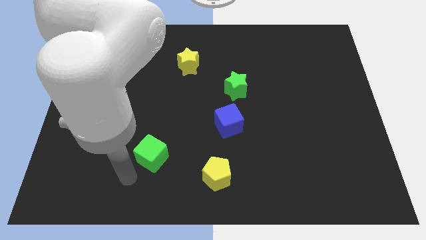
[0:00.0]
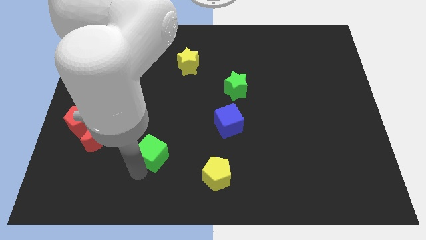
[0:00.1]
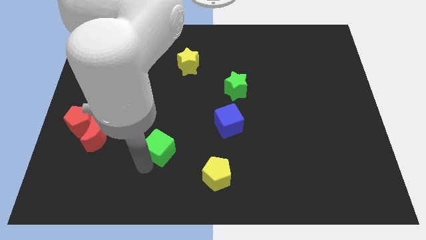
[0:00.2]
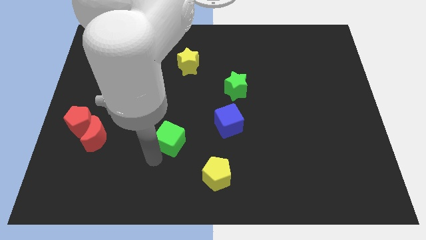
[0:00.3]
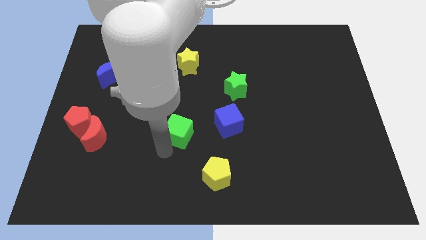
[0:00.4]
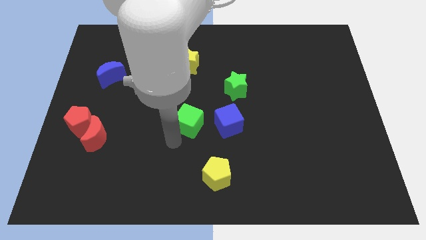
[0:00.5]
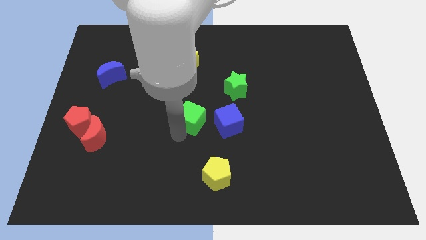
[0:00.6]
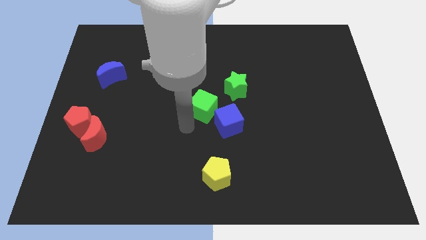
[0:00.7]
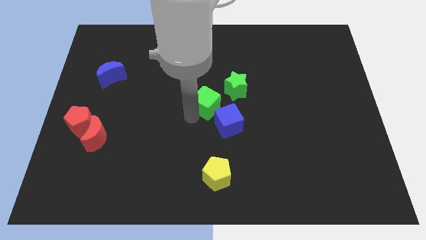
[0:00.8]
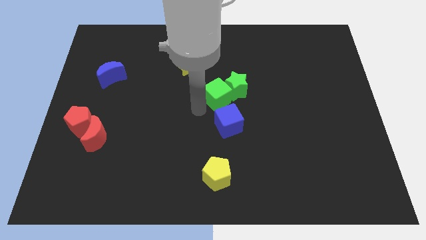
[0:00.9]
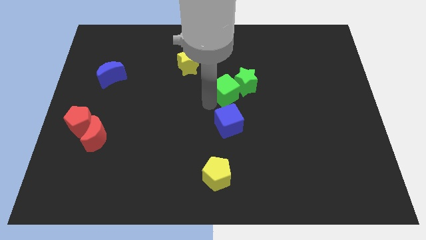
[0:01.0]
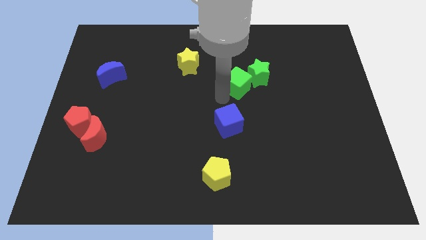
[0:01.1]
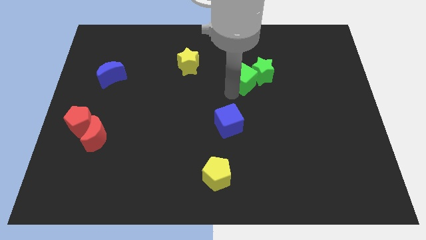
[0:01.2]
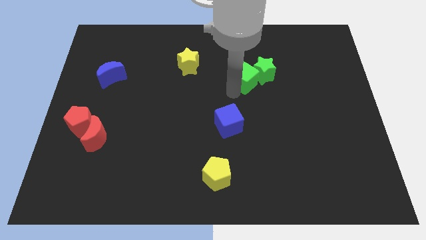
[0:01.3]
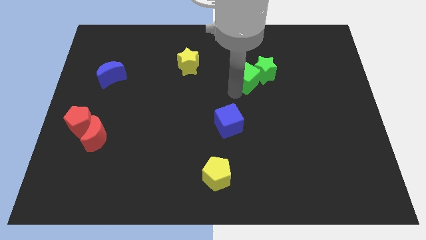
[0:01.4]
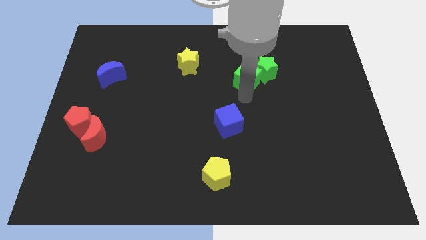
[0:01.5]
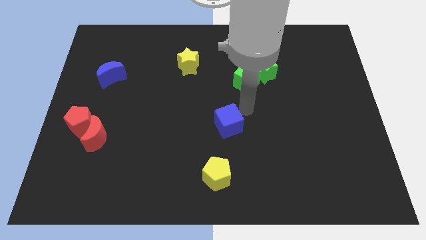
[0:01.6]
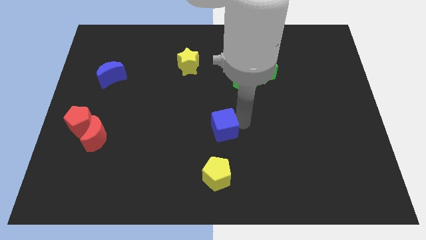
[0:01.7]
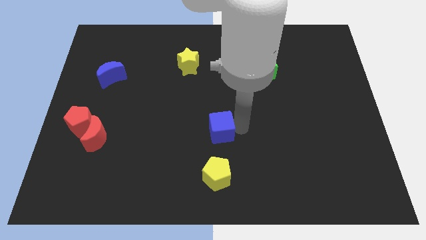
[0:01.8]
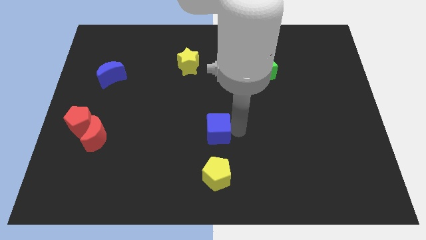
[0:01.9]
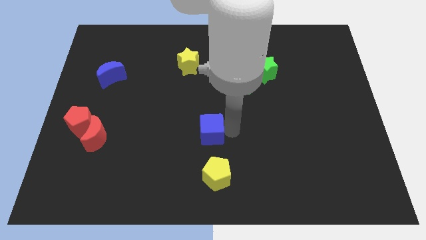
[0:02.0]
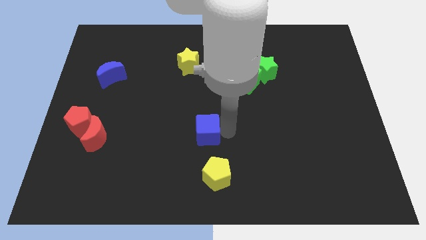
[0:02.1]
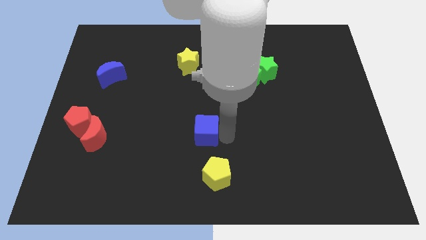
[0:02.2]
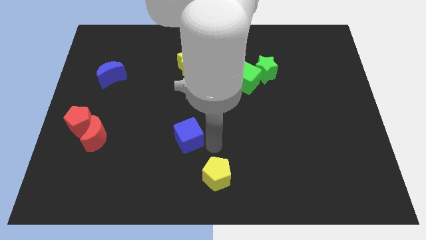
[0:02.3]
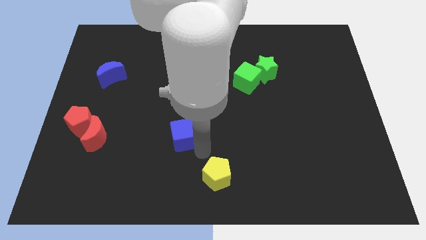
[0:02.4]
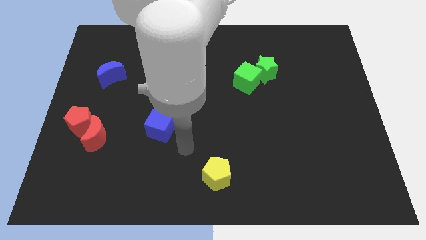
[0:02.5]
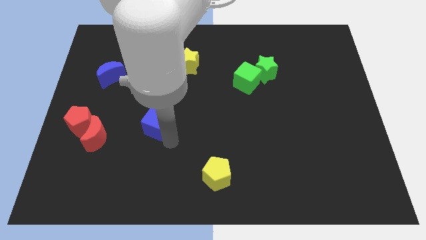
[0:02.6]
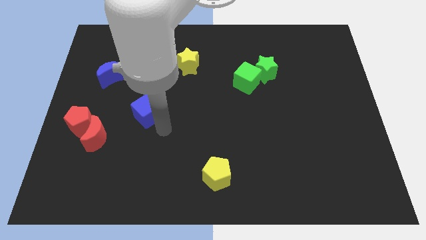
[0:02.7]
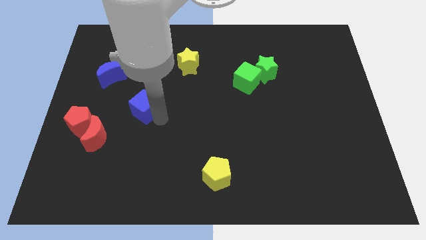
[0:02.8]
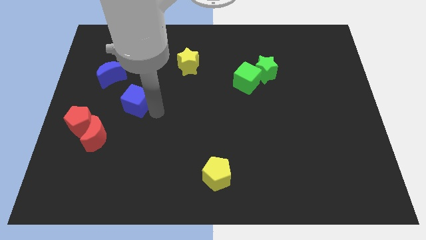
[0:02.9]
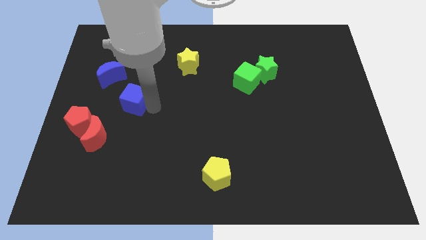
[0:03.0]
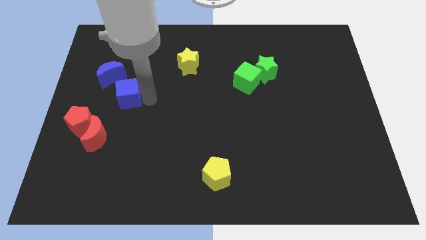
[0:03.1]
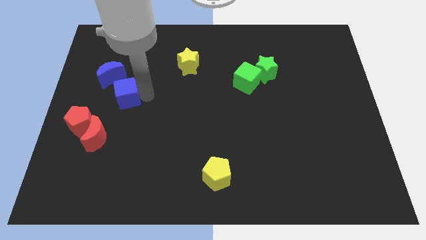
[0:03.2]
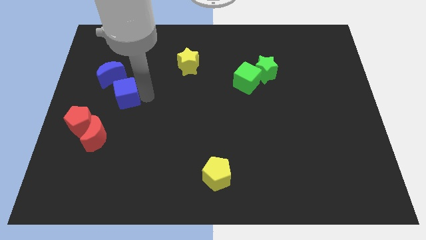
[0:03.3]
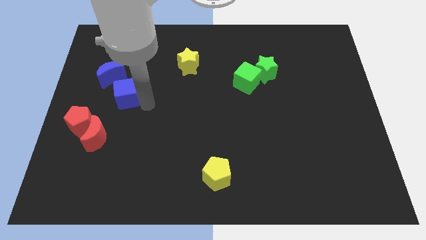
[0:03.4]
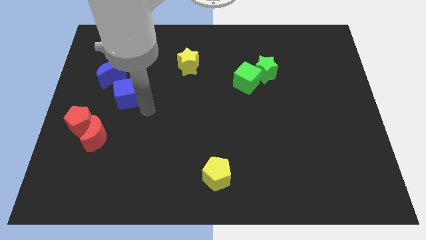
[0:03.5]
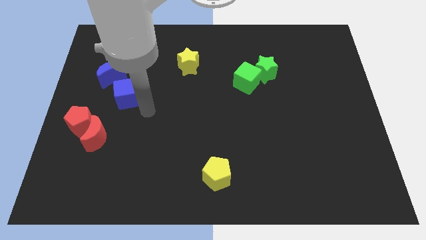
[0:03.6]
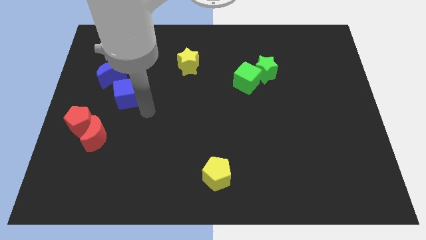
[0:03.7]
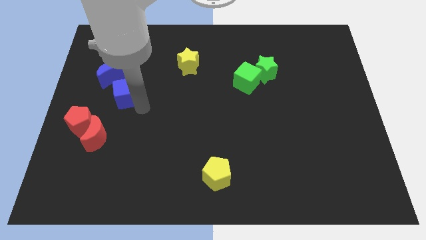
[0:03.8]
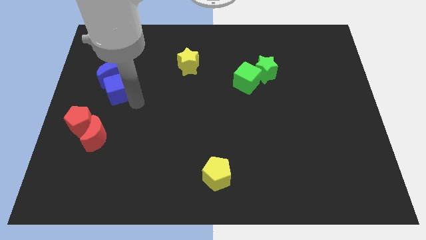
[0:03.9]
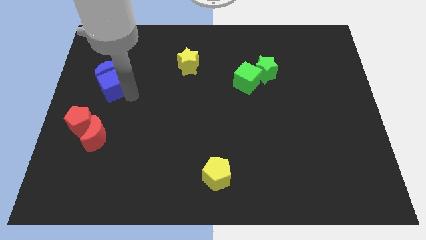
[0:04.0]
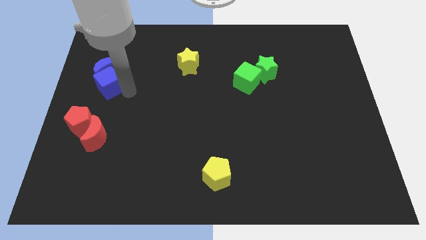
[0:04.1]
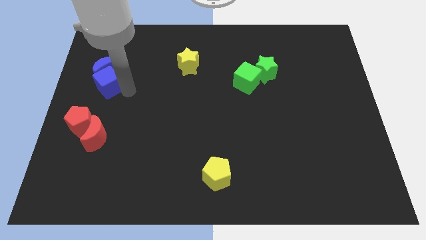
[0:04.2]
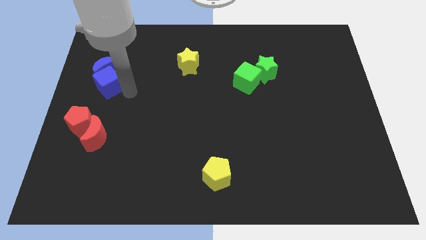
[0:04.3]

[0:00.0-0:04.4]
put both the green blocks and blue blocks horizontal to each other

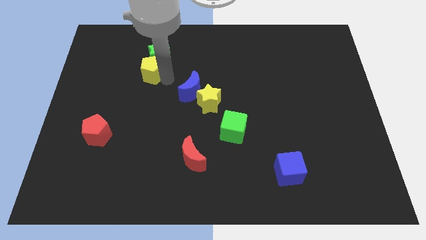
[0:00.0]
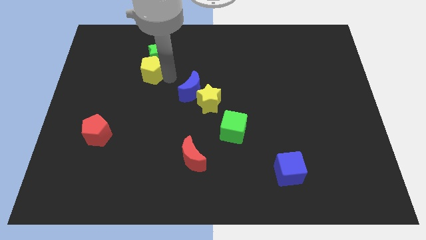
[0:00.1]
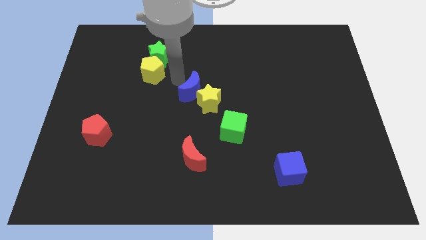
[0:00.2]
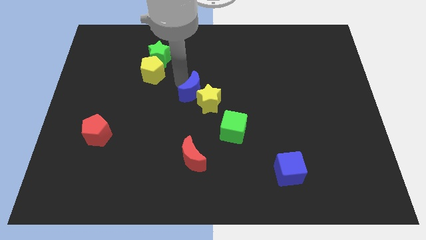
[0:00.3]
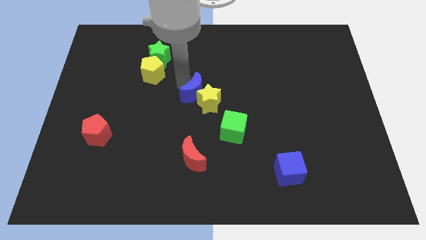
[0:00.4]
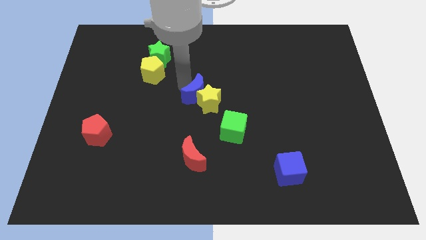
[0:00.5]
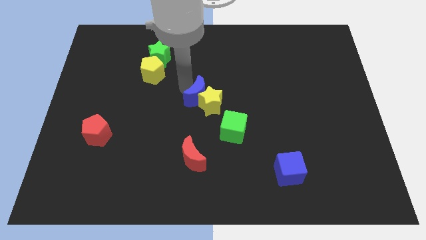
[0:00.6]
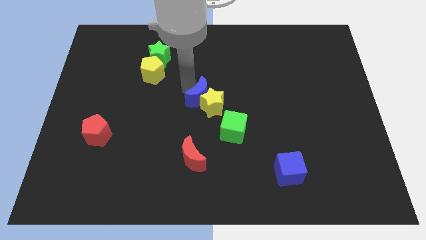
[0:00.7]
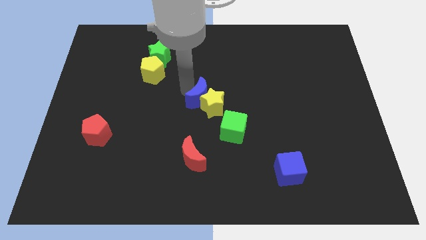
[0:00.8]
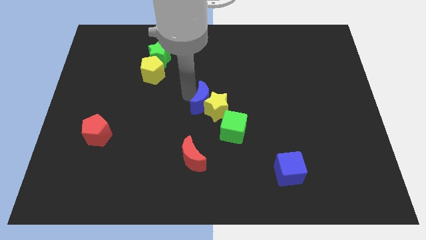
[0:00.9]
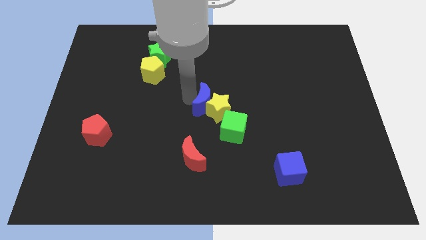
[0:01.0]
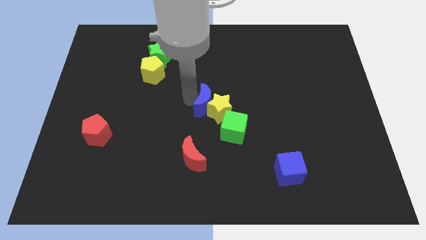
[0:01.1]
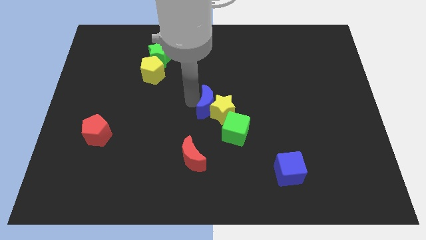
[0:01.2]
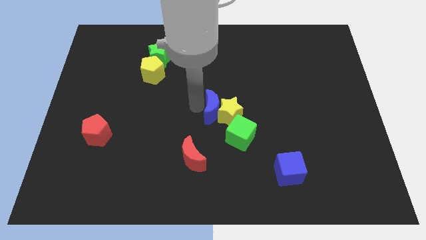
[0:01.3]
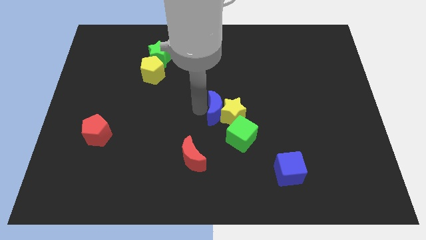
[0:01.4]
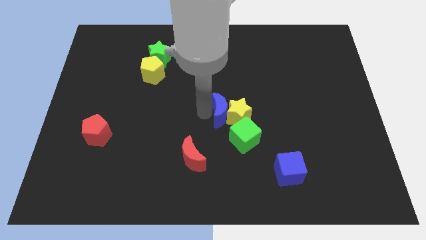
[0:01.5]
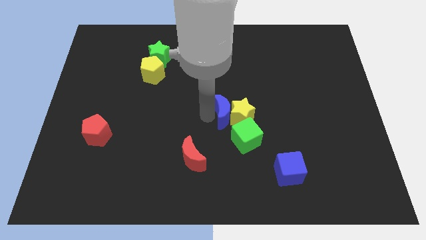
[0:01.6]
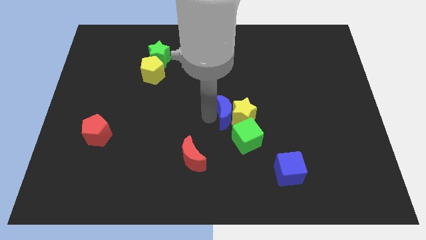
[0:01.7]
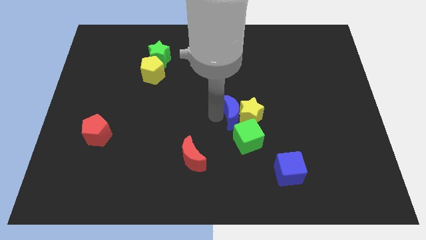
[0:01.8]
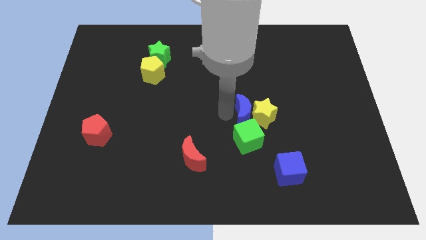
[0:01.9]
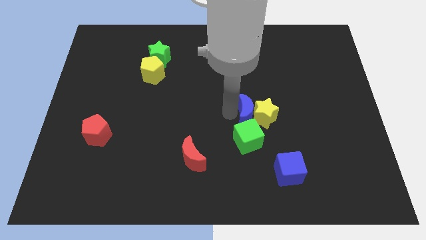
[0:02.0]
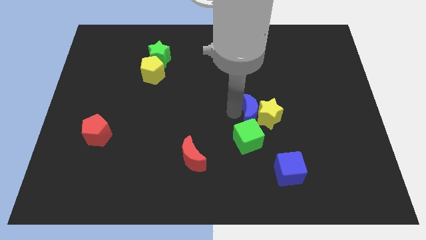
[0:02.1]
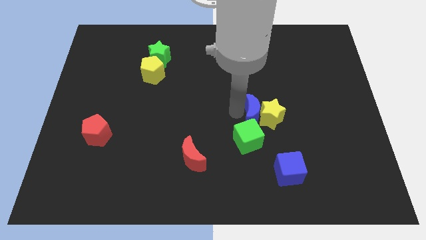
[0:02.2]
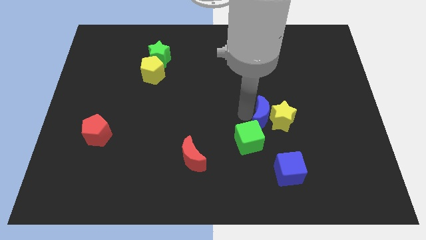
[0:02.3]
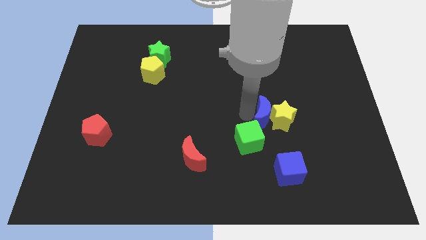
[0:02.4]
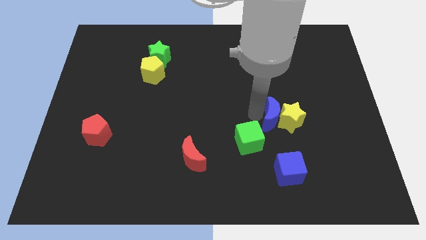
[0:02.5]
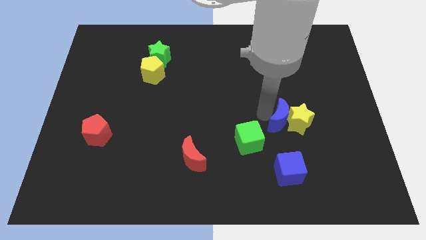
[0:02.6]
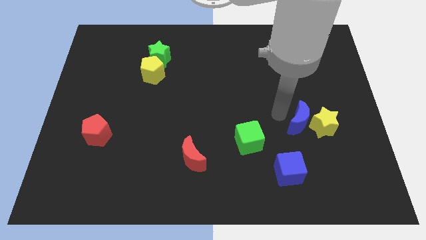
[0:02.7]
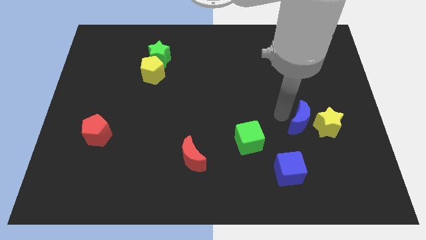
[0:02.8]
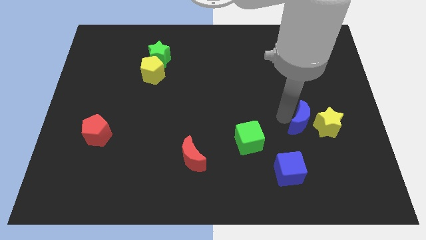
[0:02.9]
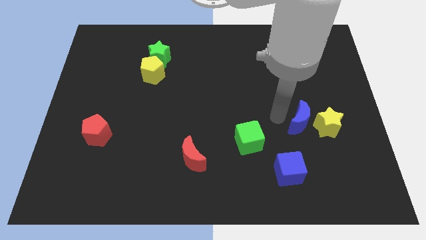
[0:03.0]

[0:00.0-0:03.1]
move the green cube with yellow star and blue moon

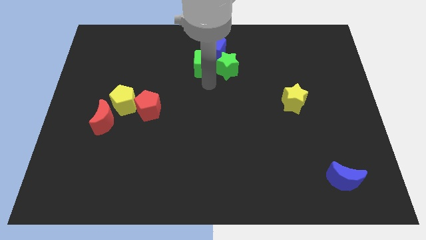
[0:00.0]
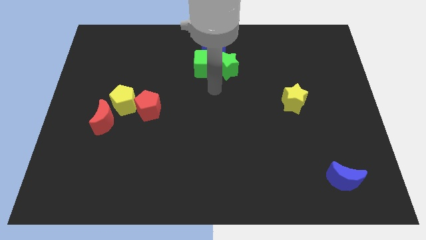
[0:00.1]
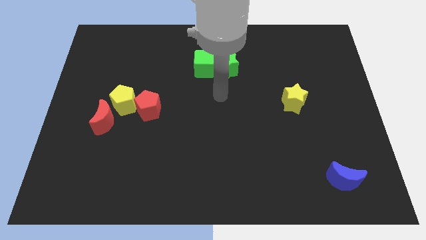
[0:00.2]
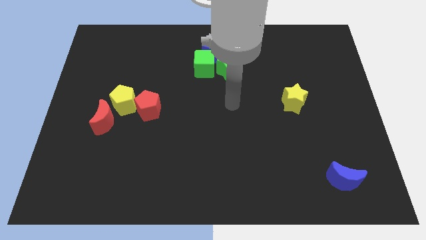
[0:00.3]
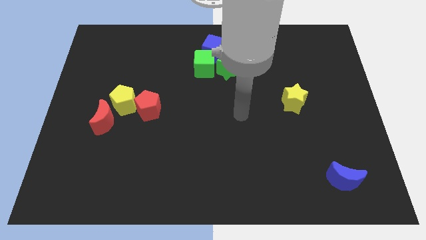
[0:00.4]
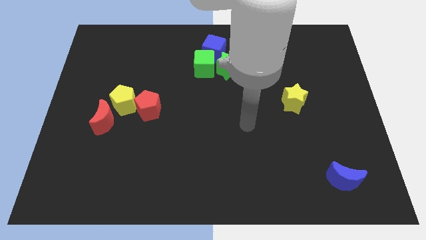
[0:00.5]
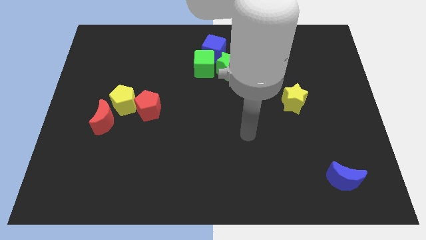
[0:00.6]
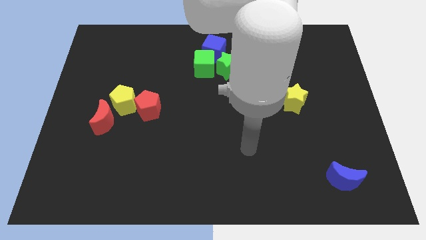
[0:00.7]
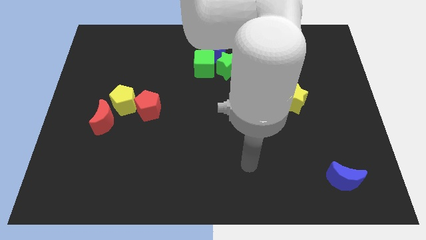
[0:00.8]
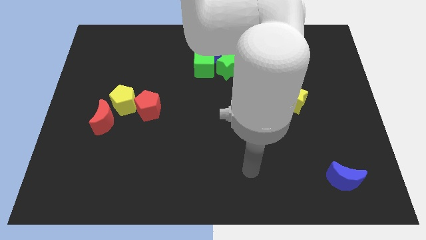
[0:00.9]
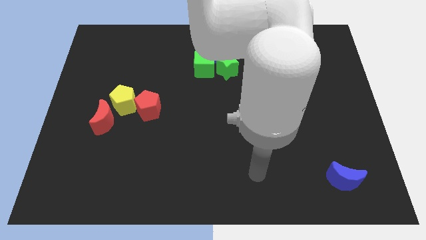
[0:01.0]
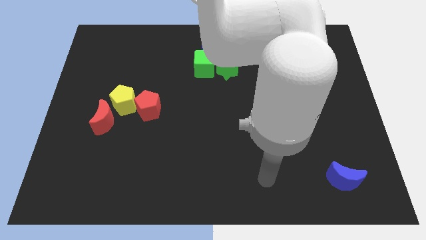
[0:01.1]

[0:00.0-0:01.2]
move the arm away from the green cube

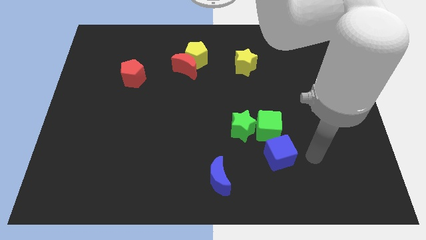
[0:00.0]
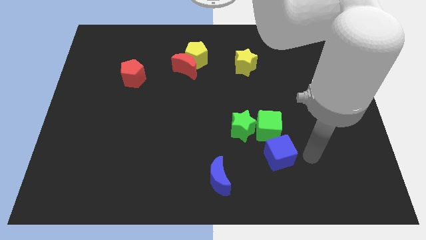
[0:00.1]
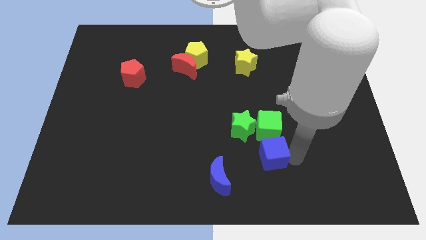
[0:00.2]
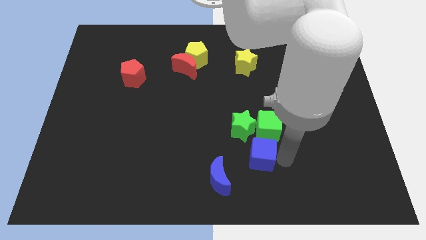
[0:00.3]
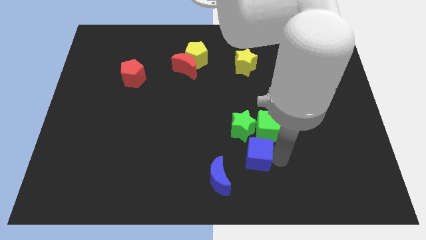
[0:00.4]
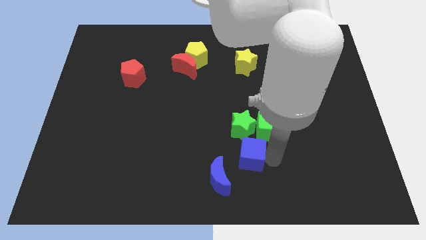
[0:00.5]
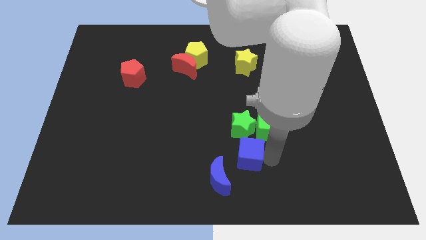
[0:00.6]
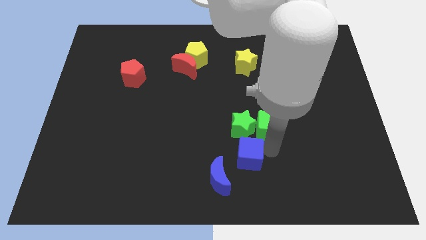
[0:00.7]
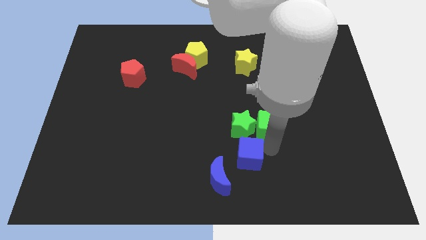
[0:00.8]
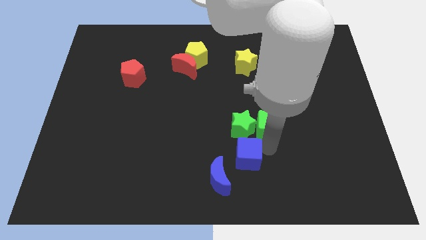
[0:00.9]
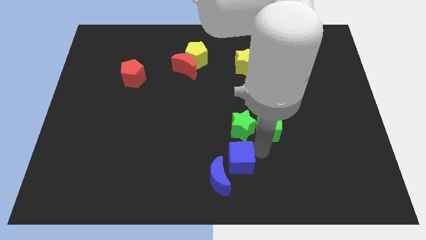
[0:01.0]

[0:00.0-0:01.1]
place blue cube to the bottom of green star
